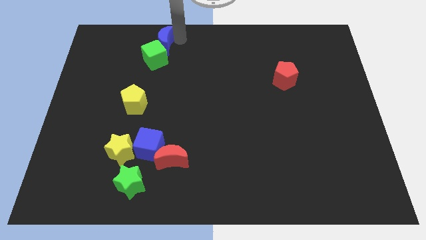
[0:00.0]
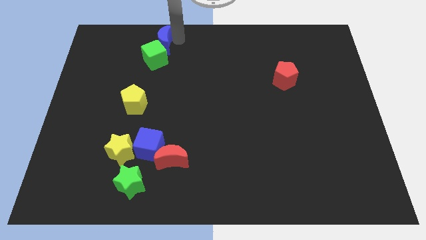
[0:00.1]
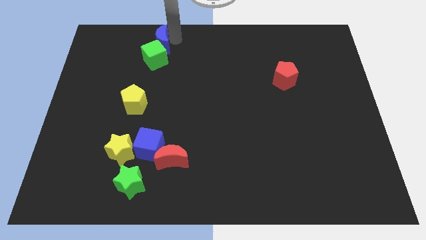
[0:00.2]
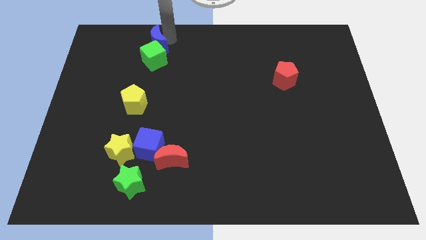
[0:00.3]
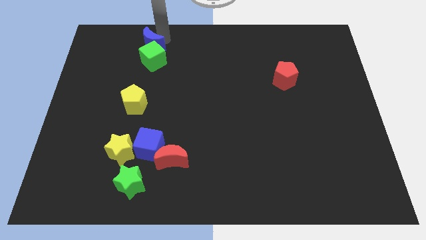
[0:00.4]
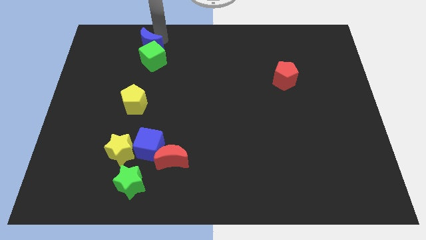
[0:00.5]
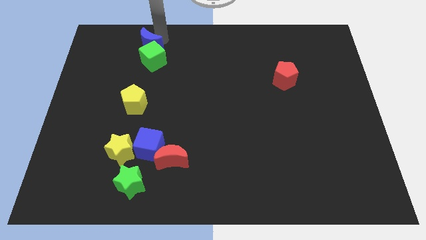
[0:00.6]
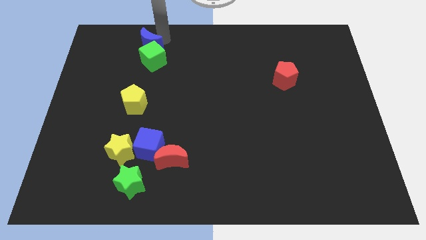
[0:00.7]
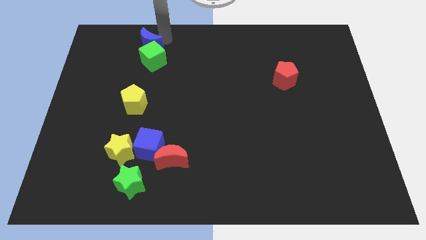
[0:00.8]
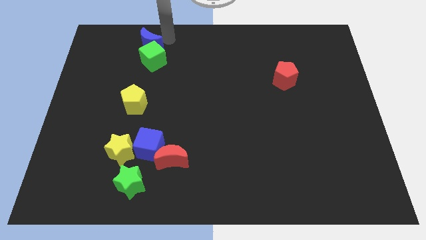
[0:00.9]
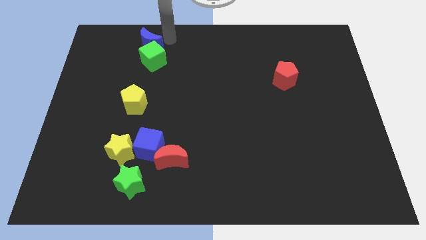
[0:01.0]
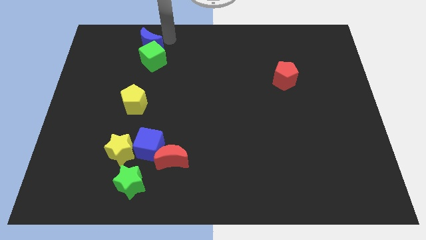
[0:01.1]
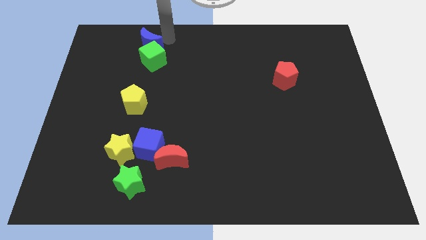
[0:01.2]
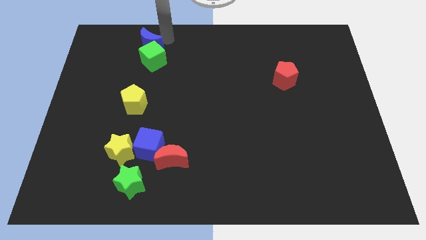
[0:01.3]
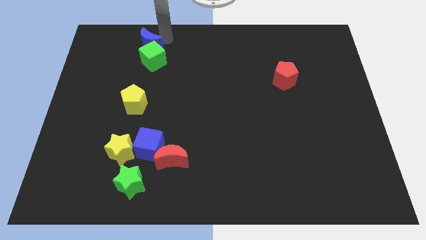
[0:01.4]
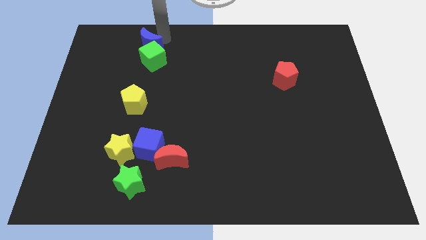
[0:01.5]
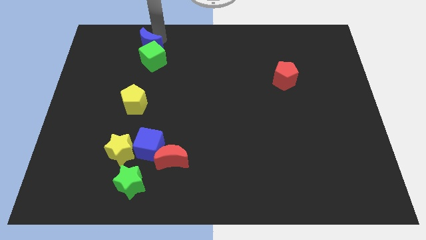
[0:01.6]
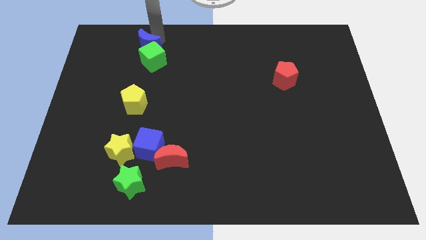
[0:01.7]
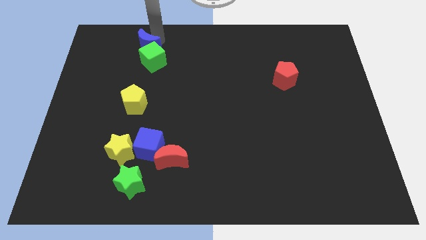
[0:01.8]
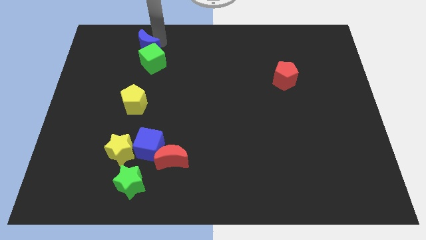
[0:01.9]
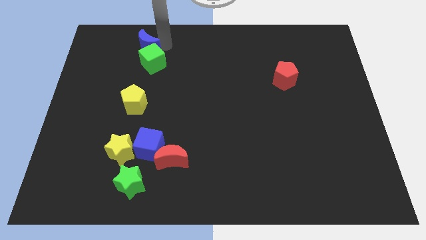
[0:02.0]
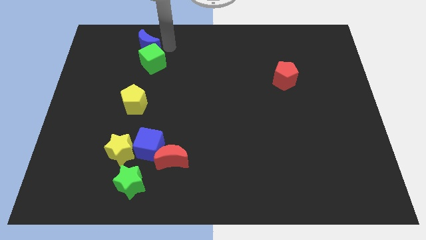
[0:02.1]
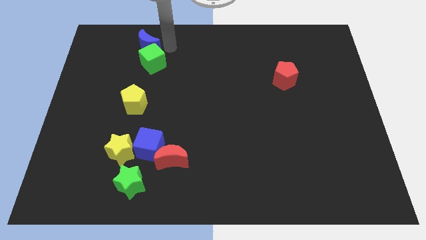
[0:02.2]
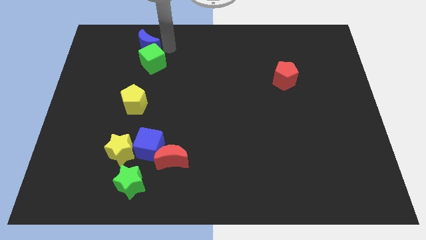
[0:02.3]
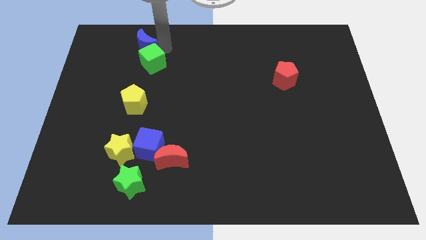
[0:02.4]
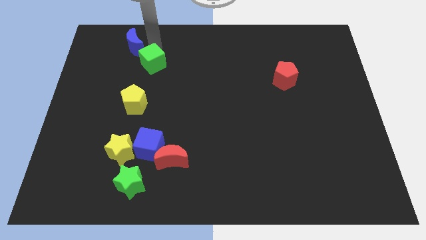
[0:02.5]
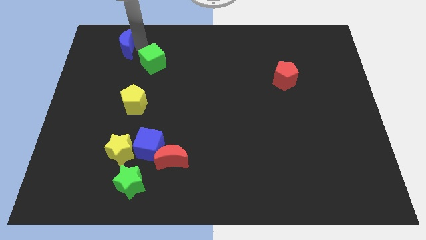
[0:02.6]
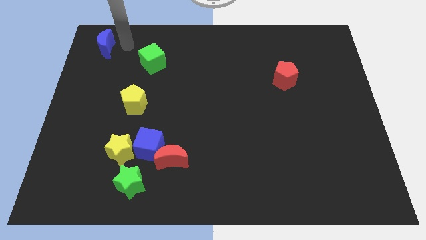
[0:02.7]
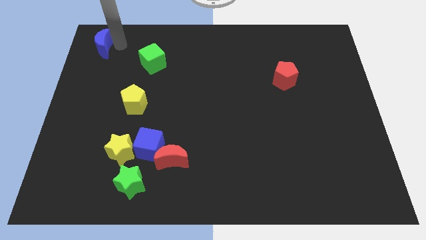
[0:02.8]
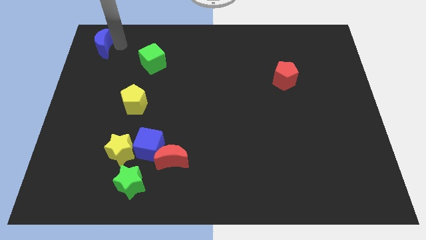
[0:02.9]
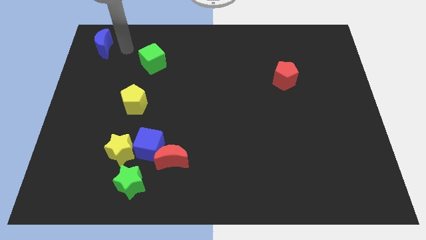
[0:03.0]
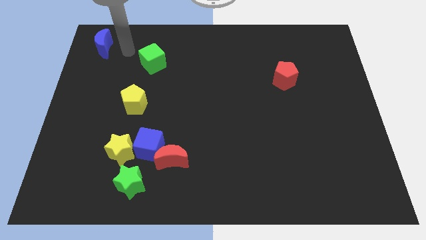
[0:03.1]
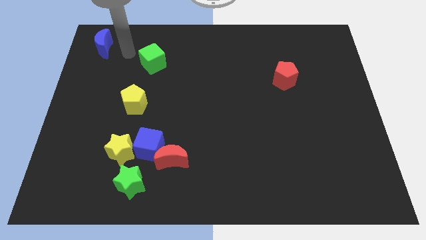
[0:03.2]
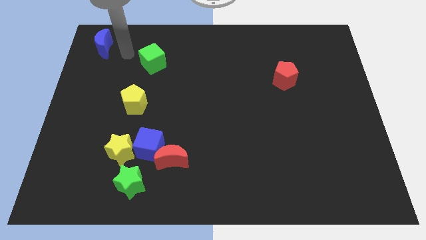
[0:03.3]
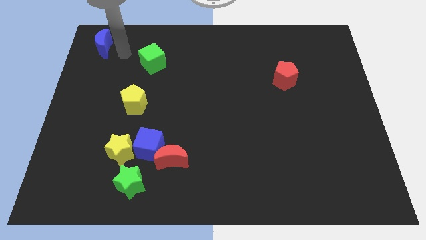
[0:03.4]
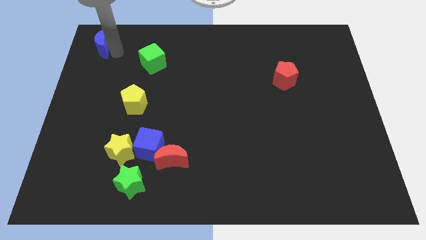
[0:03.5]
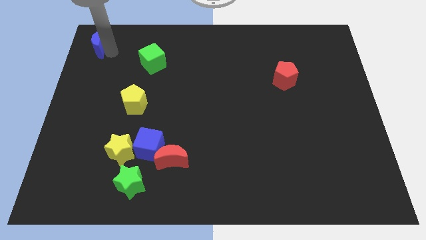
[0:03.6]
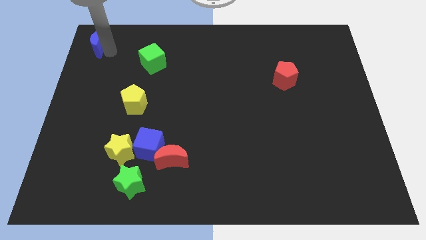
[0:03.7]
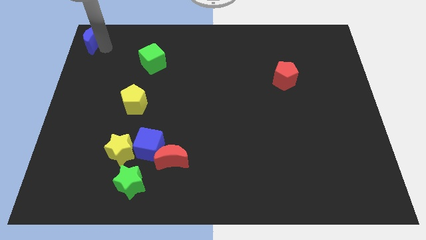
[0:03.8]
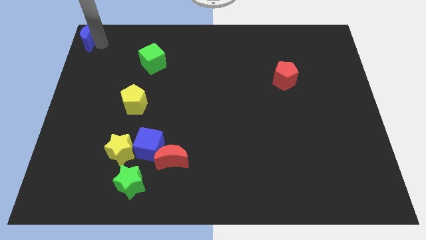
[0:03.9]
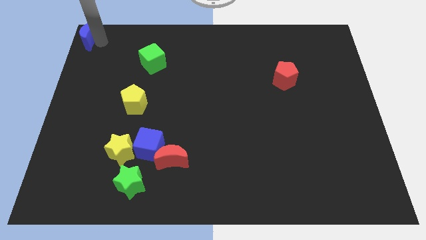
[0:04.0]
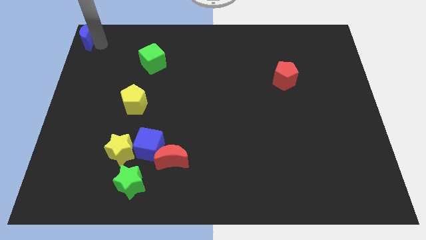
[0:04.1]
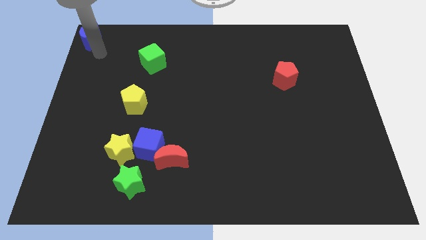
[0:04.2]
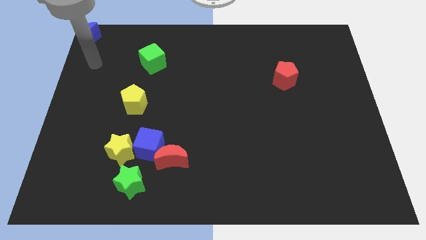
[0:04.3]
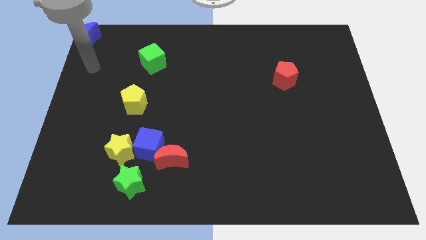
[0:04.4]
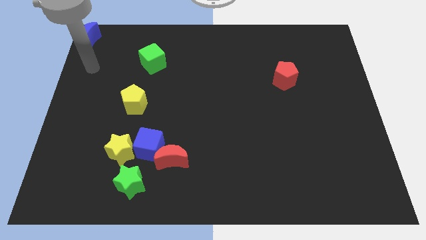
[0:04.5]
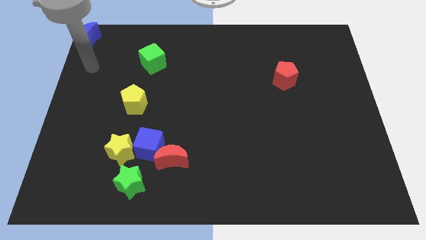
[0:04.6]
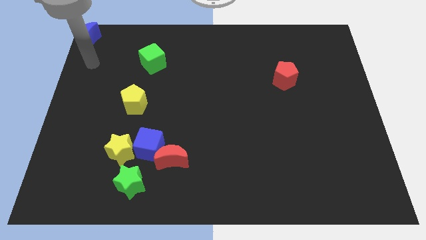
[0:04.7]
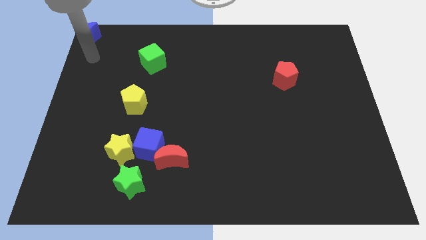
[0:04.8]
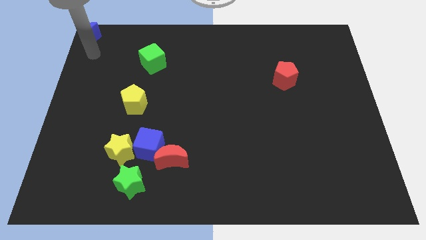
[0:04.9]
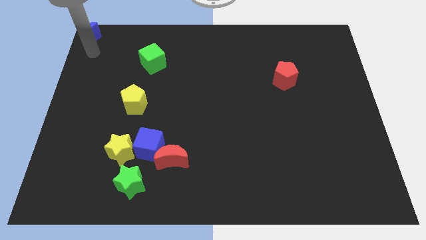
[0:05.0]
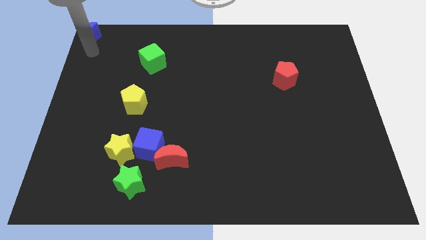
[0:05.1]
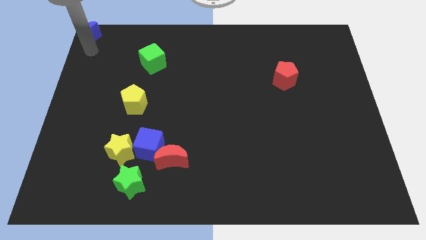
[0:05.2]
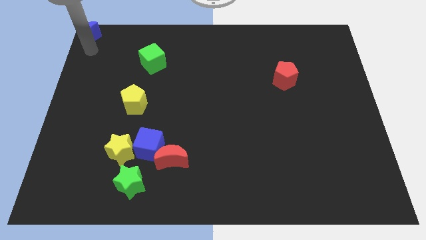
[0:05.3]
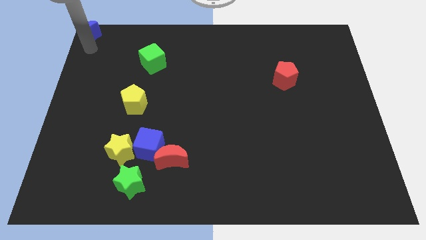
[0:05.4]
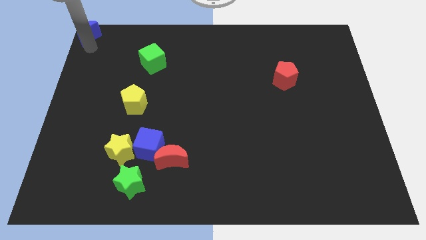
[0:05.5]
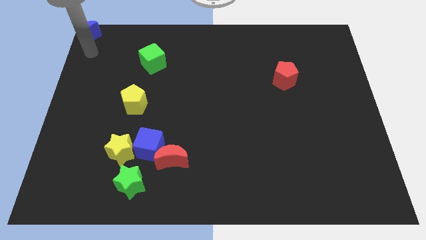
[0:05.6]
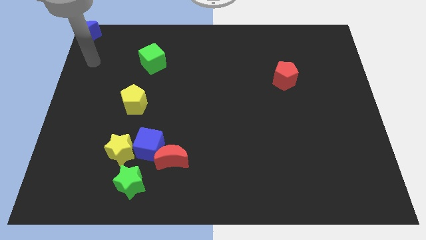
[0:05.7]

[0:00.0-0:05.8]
move the blue moon to the top left corner of the board

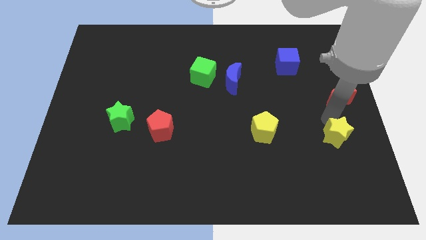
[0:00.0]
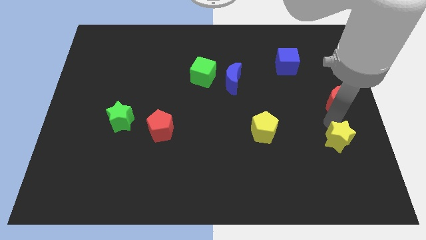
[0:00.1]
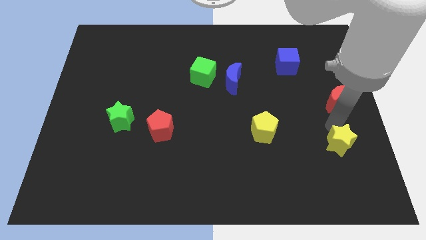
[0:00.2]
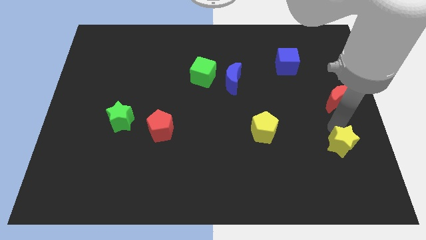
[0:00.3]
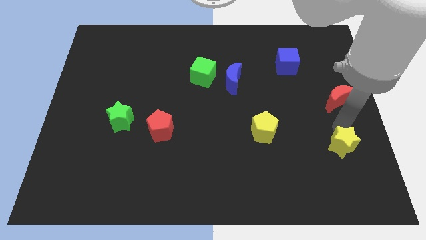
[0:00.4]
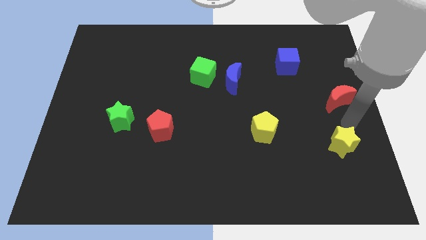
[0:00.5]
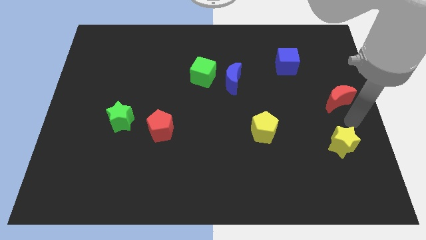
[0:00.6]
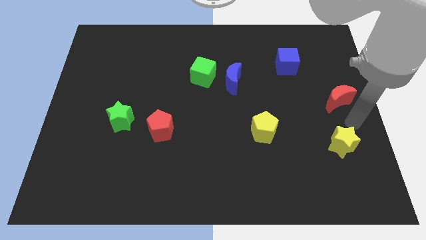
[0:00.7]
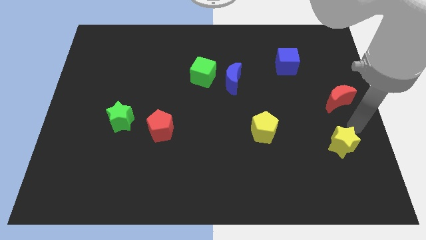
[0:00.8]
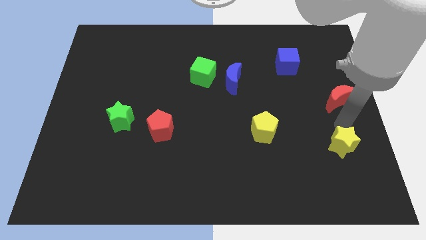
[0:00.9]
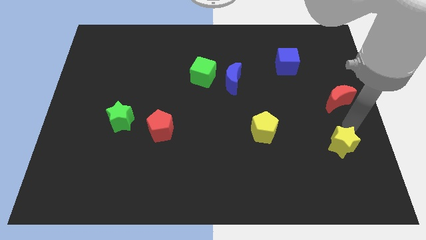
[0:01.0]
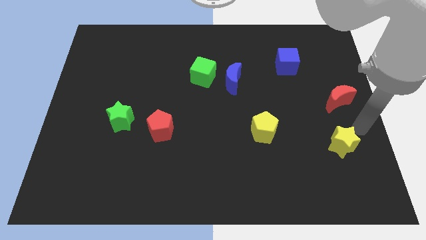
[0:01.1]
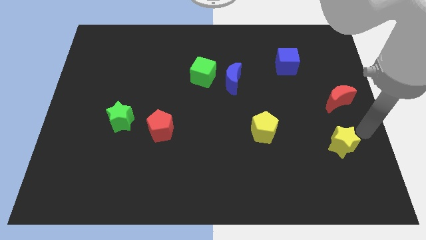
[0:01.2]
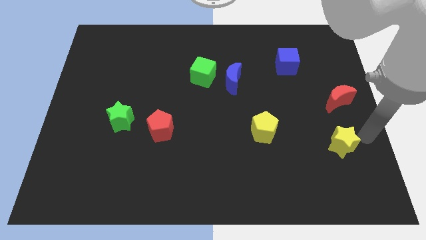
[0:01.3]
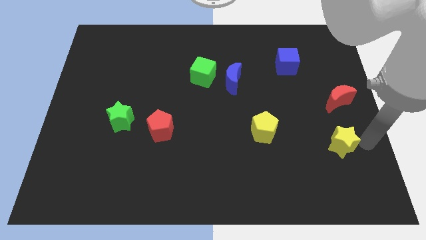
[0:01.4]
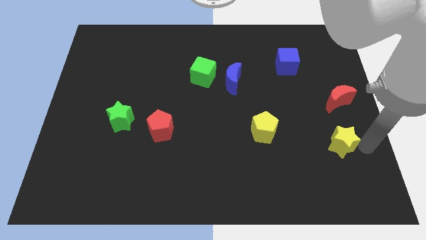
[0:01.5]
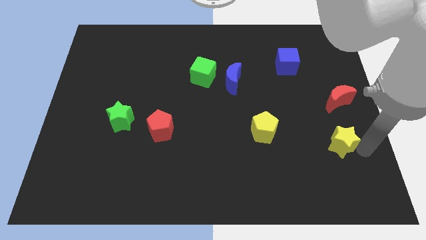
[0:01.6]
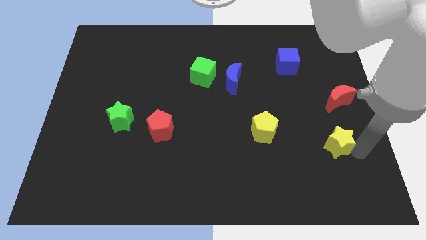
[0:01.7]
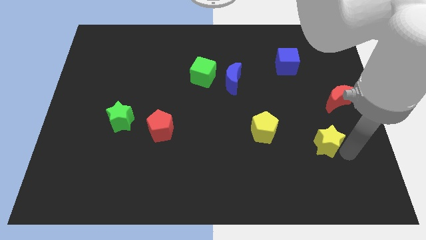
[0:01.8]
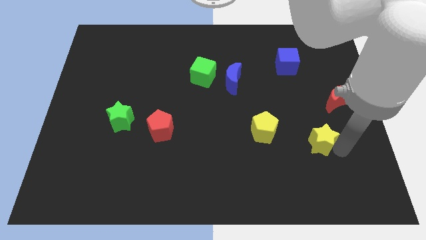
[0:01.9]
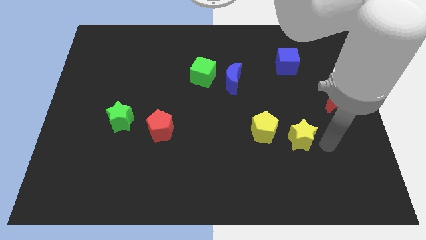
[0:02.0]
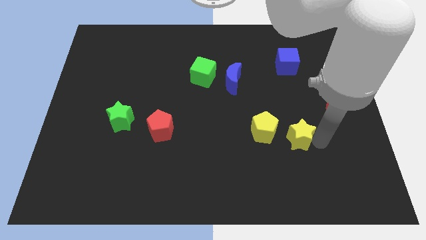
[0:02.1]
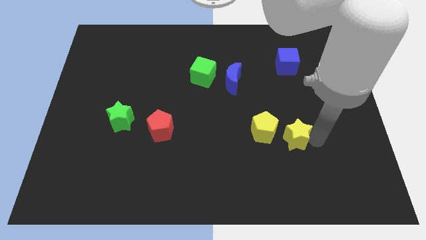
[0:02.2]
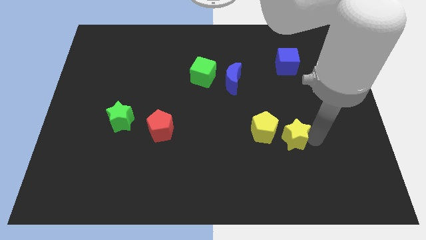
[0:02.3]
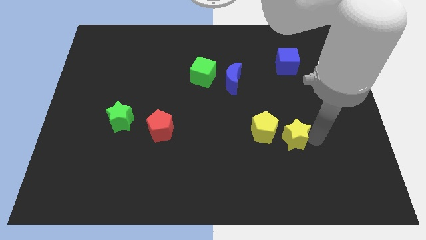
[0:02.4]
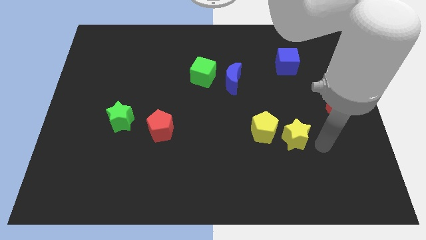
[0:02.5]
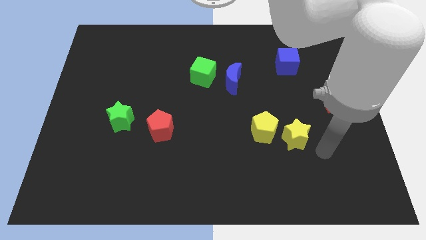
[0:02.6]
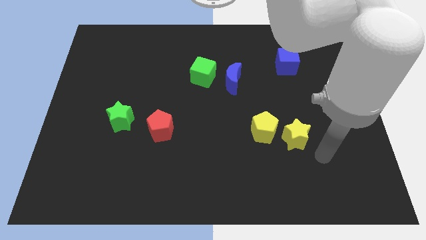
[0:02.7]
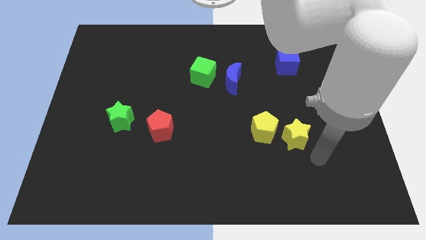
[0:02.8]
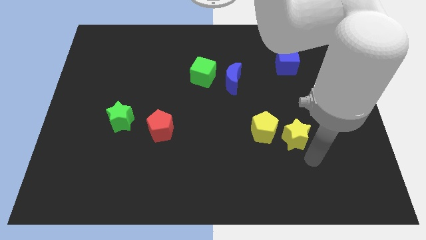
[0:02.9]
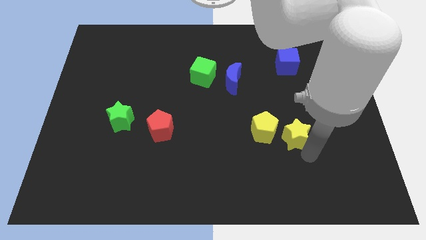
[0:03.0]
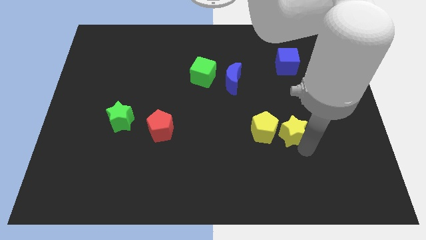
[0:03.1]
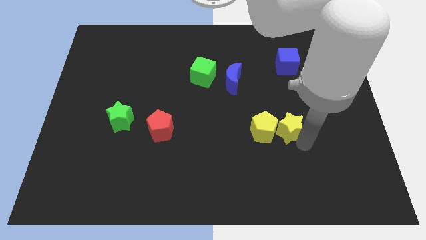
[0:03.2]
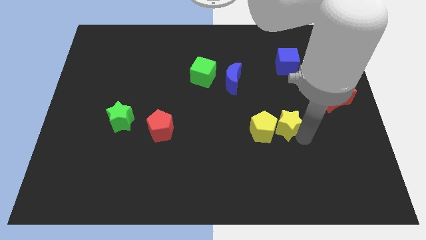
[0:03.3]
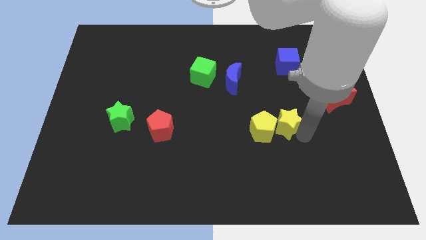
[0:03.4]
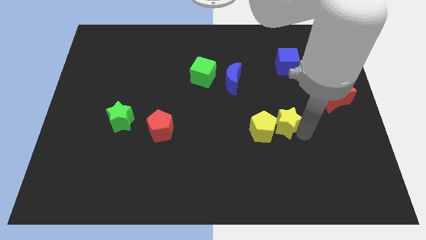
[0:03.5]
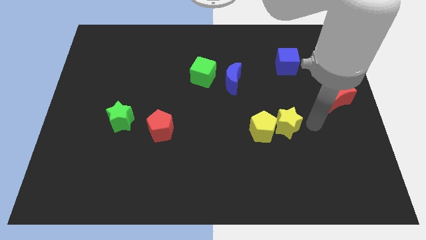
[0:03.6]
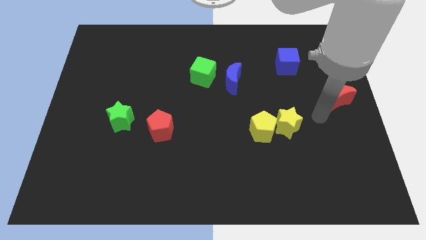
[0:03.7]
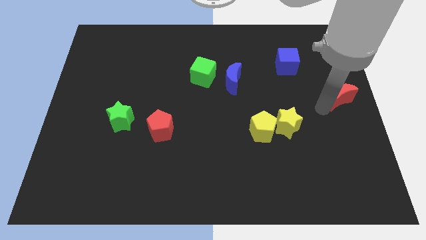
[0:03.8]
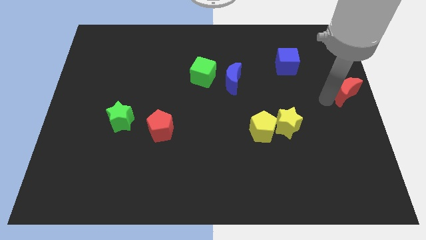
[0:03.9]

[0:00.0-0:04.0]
push the yellow star into the yellow pentagon
